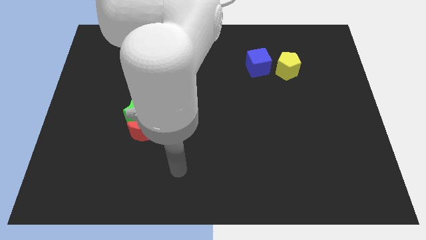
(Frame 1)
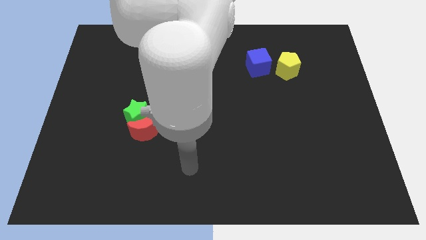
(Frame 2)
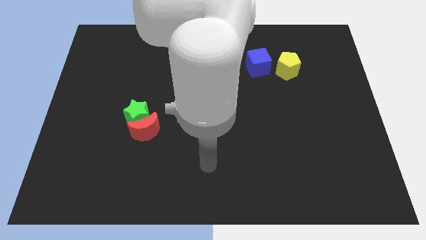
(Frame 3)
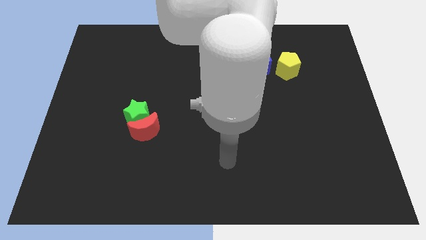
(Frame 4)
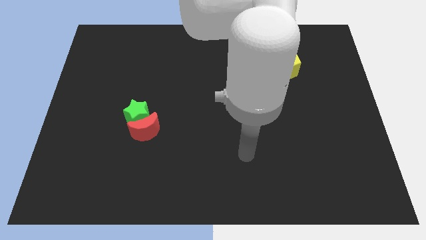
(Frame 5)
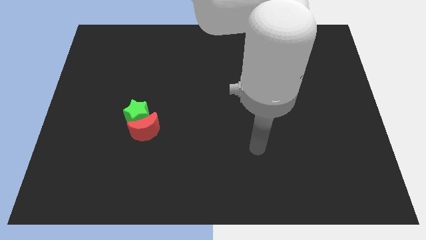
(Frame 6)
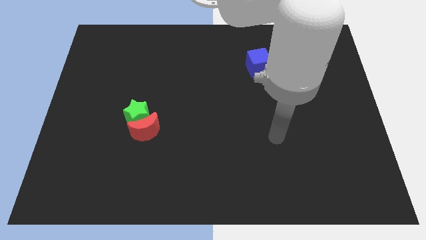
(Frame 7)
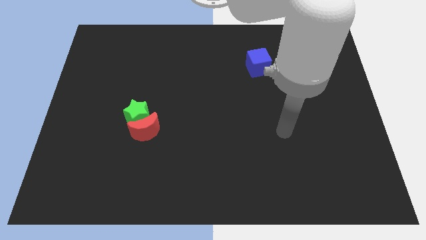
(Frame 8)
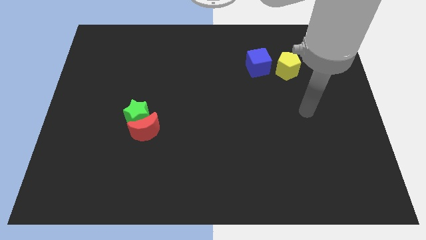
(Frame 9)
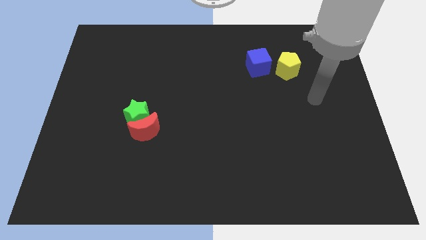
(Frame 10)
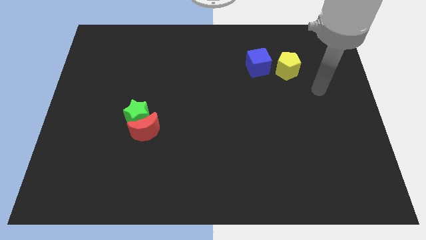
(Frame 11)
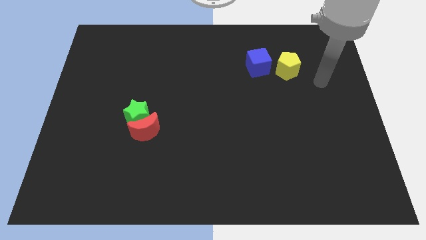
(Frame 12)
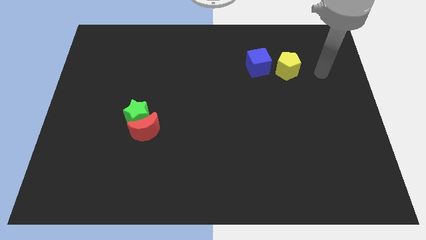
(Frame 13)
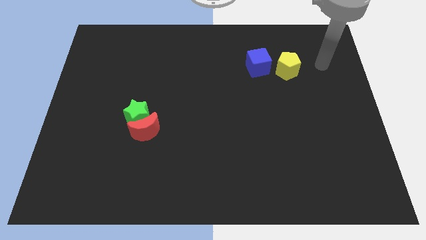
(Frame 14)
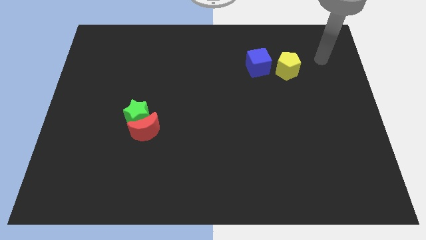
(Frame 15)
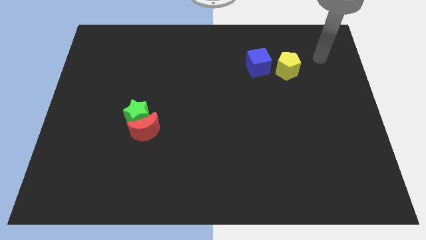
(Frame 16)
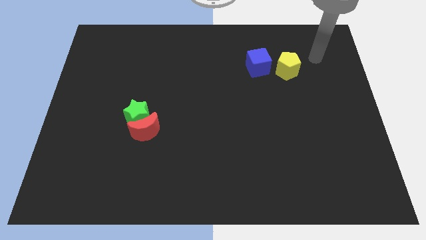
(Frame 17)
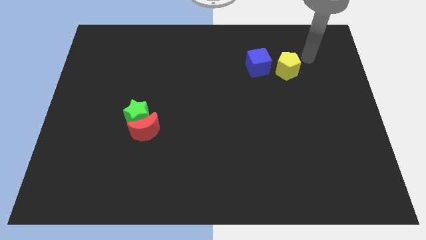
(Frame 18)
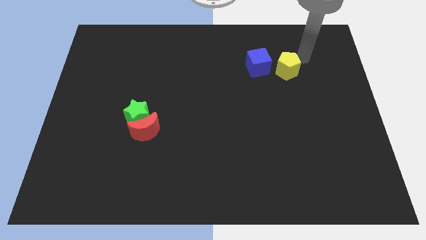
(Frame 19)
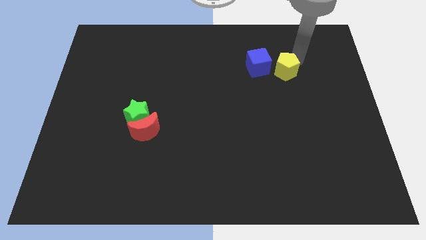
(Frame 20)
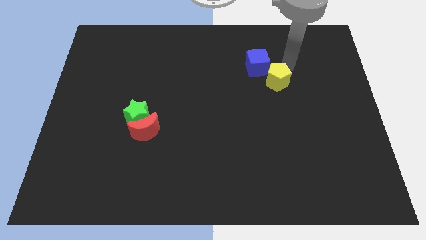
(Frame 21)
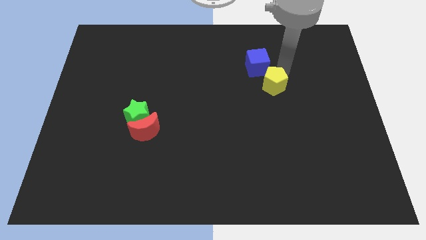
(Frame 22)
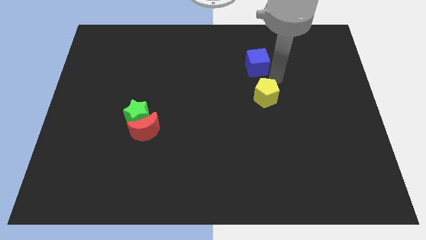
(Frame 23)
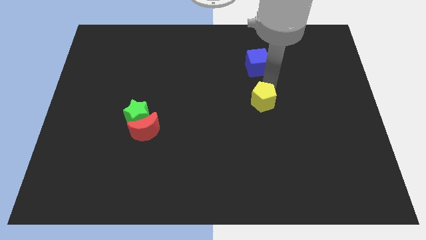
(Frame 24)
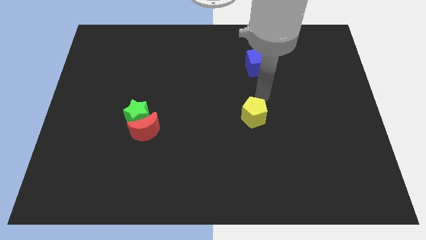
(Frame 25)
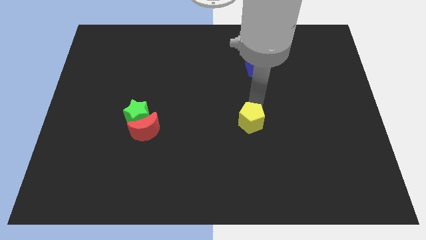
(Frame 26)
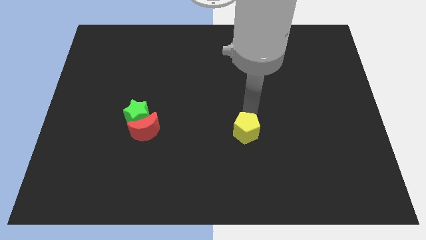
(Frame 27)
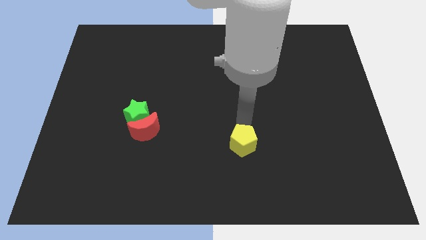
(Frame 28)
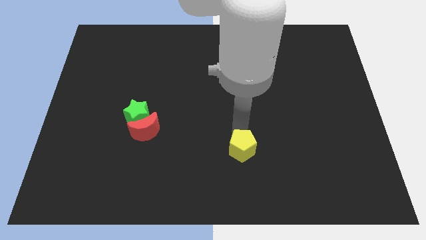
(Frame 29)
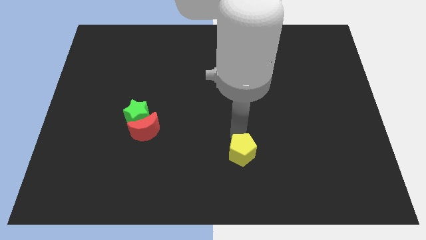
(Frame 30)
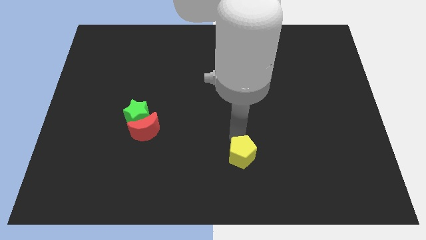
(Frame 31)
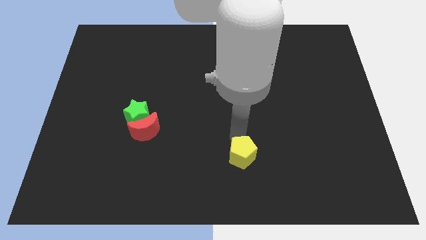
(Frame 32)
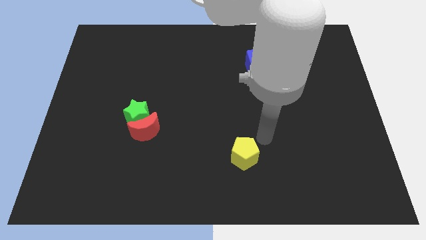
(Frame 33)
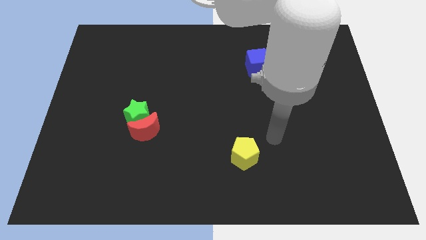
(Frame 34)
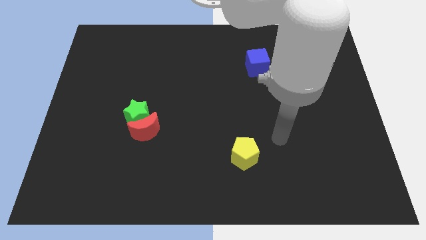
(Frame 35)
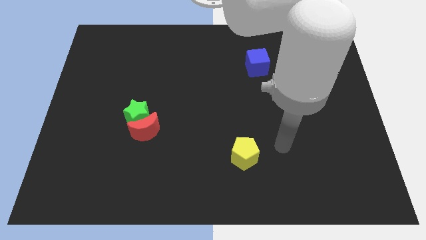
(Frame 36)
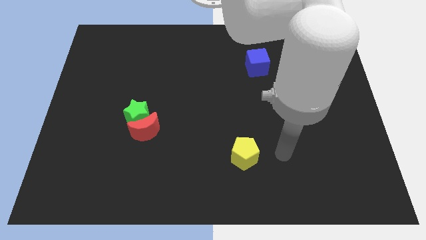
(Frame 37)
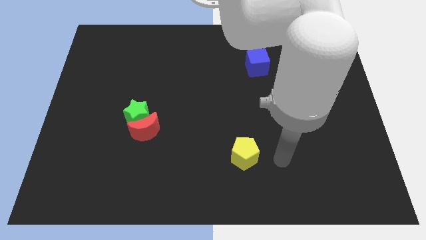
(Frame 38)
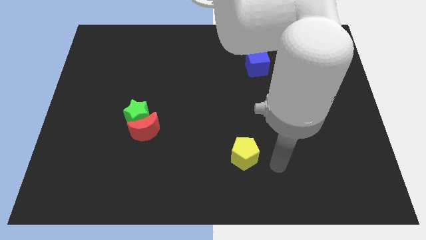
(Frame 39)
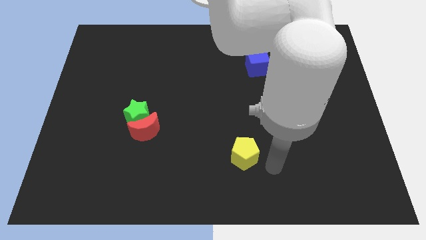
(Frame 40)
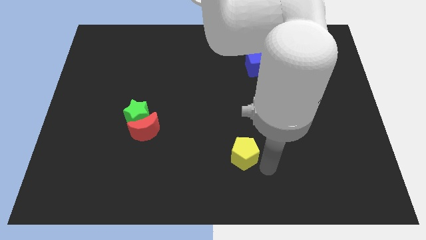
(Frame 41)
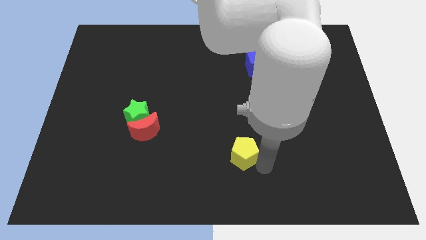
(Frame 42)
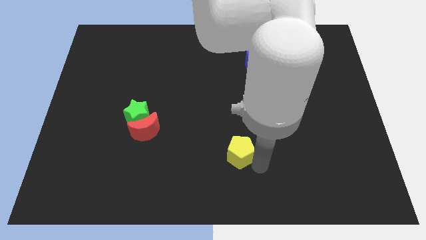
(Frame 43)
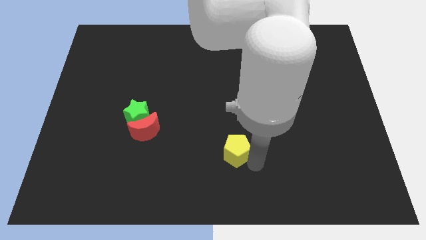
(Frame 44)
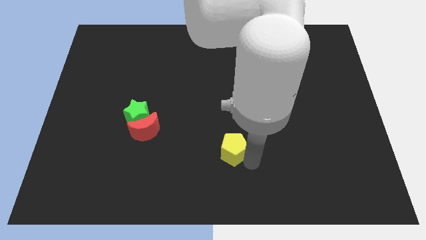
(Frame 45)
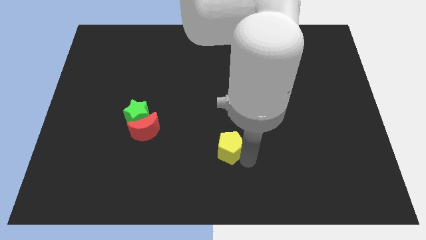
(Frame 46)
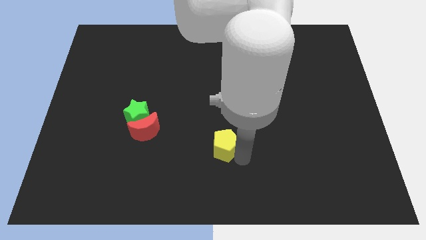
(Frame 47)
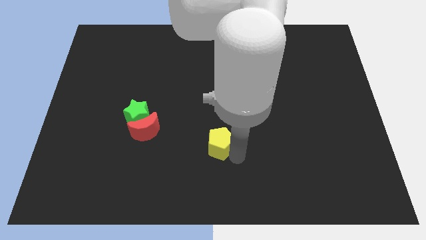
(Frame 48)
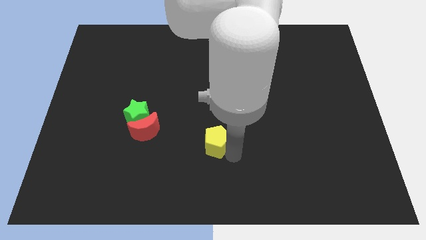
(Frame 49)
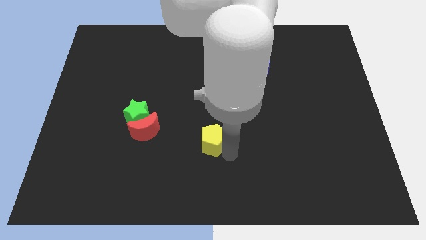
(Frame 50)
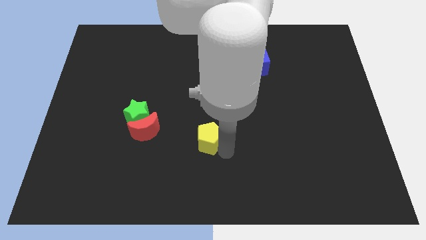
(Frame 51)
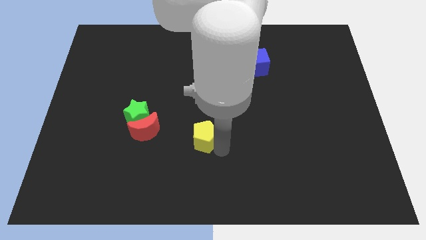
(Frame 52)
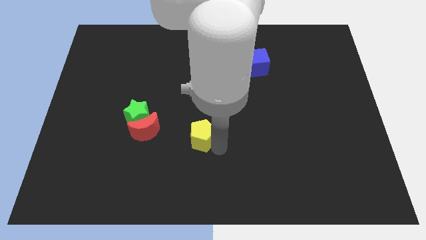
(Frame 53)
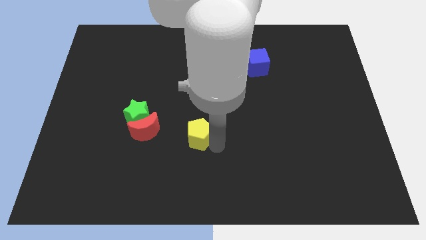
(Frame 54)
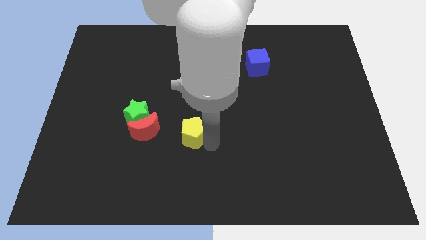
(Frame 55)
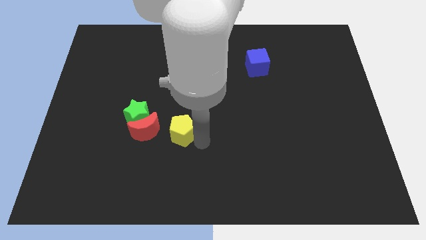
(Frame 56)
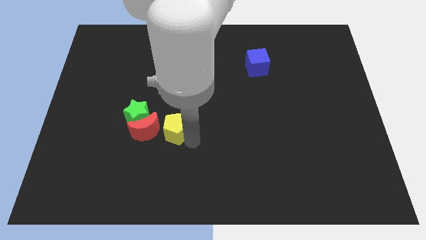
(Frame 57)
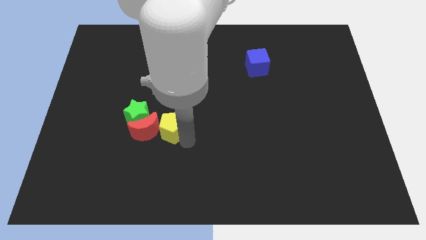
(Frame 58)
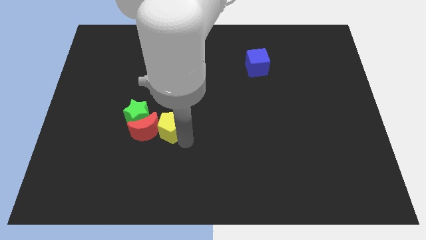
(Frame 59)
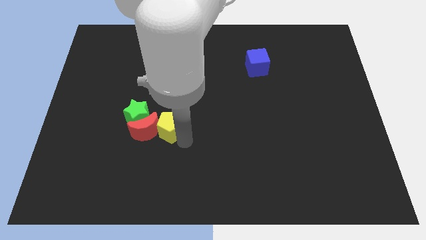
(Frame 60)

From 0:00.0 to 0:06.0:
put the yellow block close to the red block

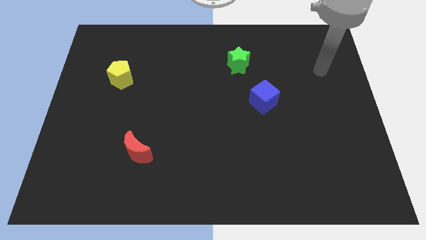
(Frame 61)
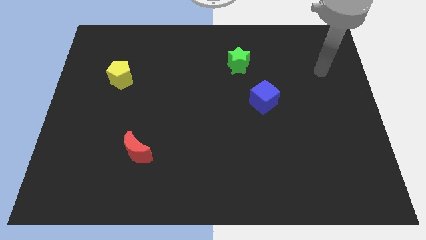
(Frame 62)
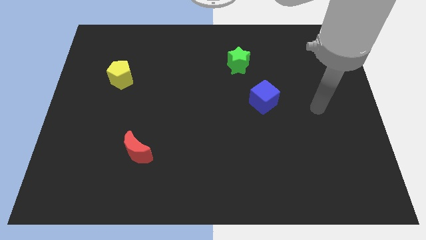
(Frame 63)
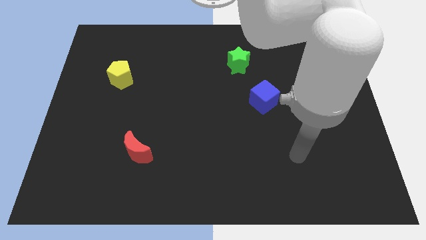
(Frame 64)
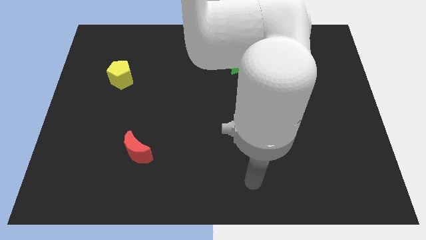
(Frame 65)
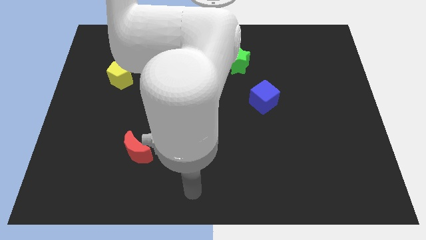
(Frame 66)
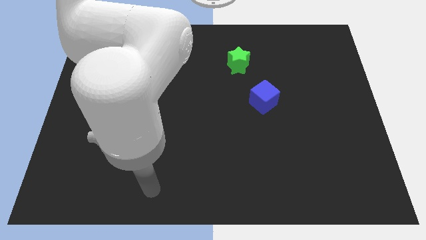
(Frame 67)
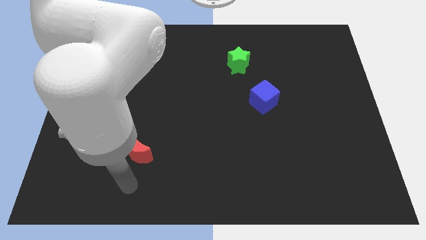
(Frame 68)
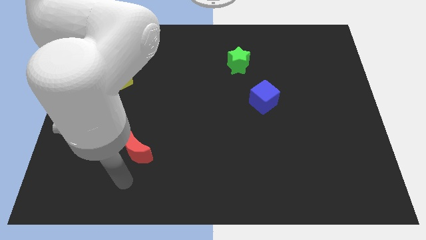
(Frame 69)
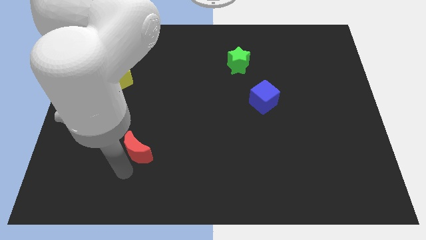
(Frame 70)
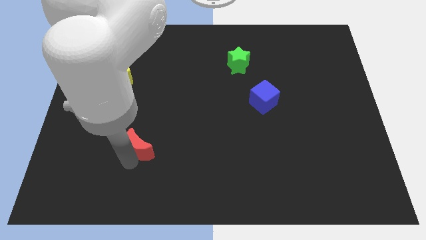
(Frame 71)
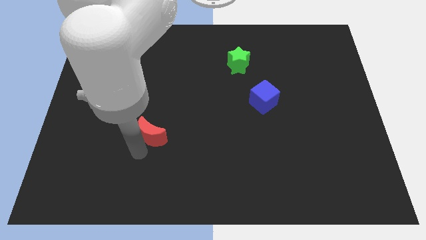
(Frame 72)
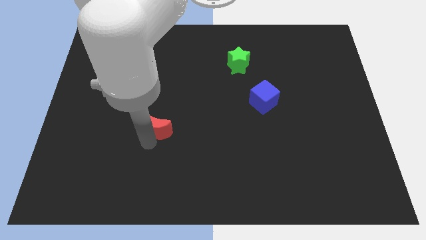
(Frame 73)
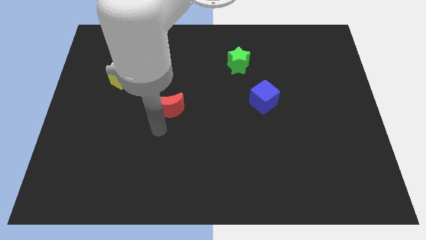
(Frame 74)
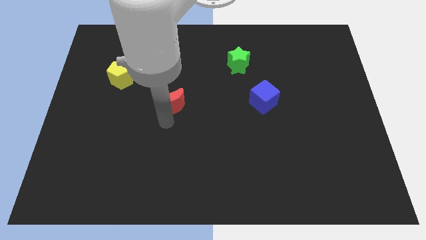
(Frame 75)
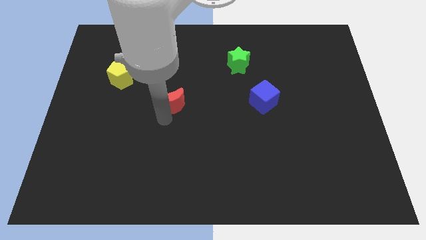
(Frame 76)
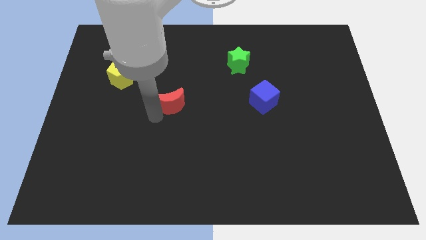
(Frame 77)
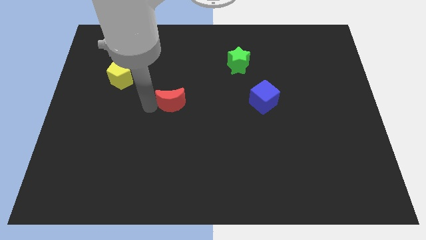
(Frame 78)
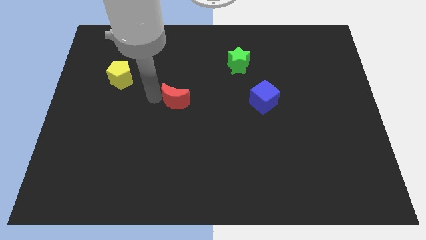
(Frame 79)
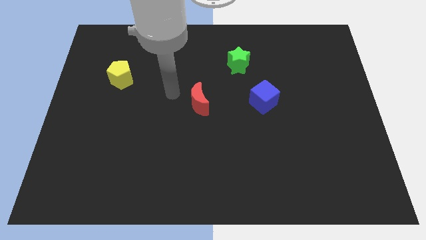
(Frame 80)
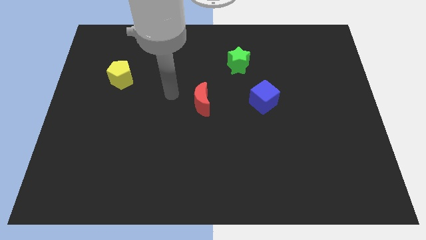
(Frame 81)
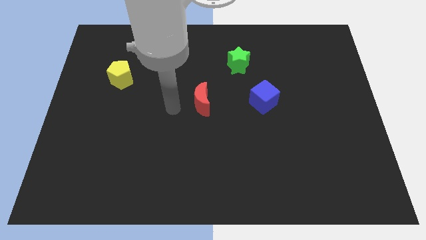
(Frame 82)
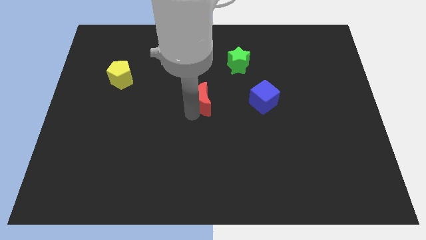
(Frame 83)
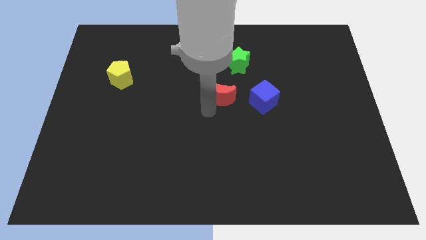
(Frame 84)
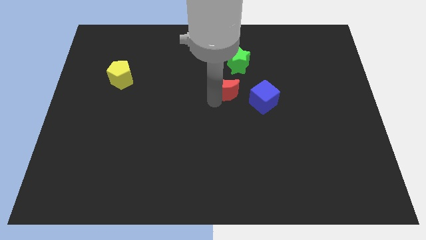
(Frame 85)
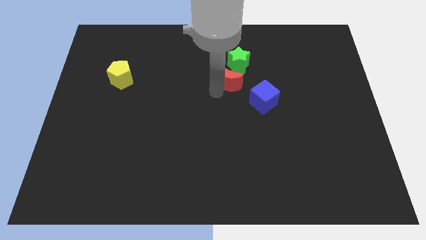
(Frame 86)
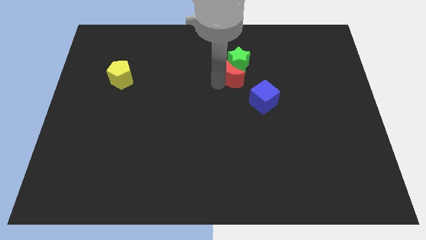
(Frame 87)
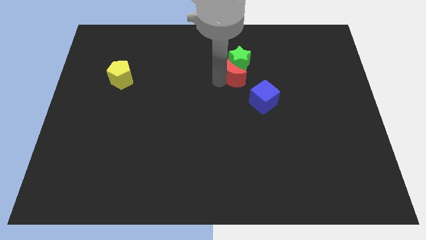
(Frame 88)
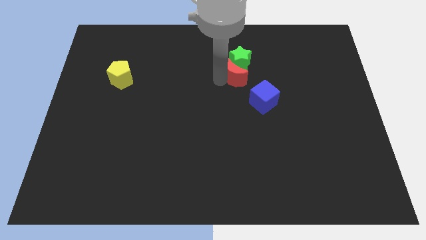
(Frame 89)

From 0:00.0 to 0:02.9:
slide the moon next to the star
